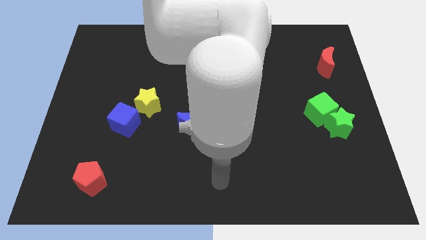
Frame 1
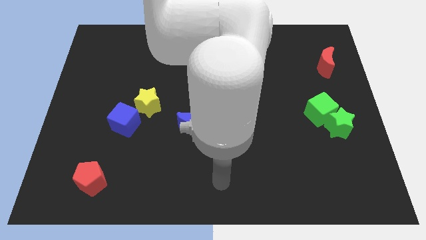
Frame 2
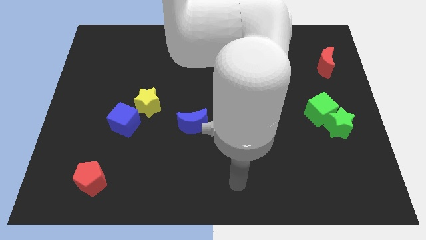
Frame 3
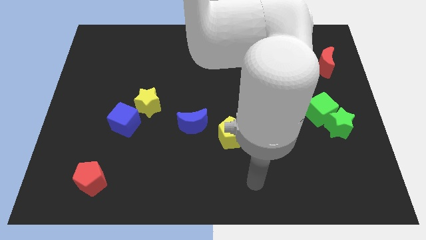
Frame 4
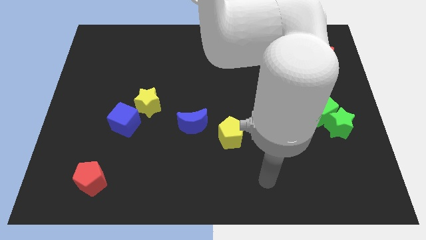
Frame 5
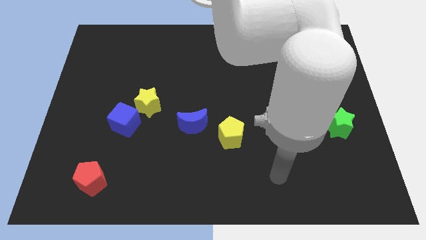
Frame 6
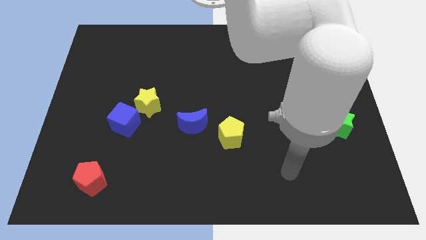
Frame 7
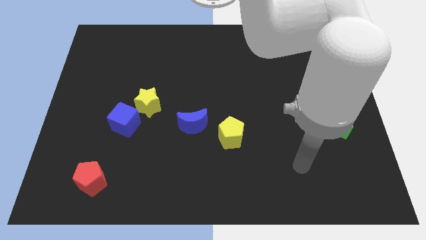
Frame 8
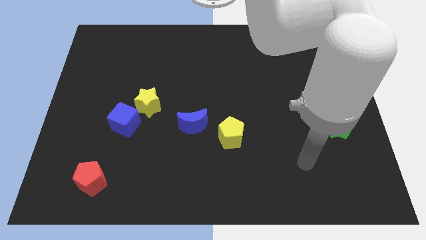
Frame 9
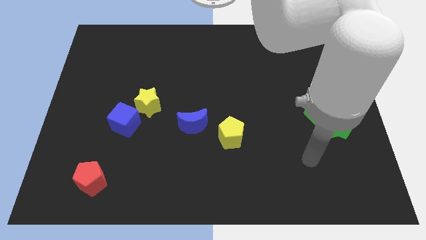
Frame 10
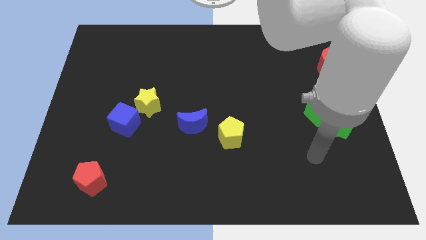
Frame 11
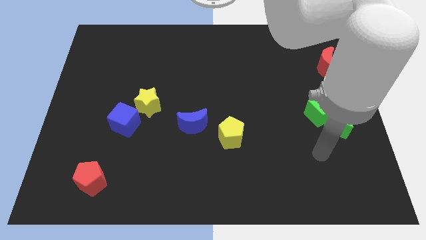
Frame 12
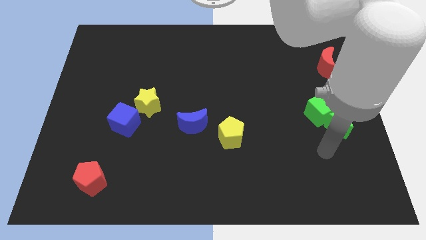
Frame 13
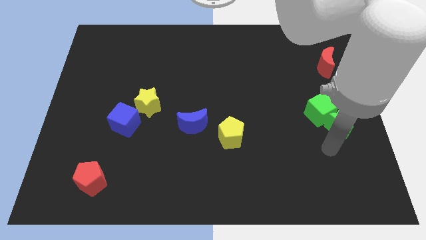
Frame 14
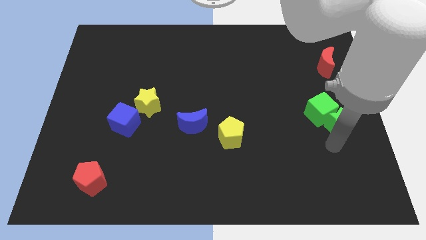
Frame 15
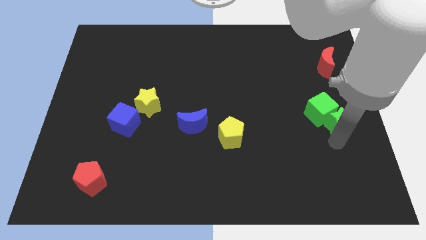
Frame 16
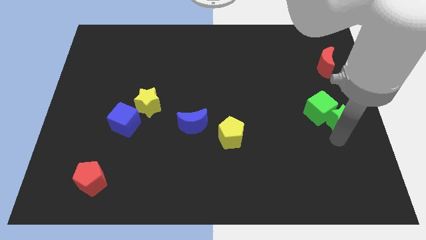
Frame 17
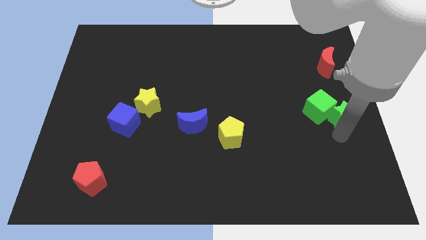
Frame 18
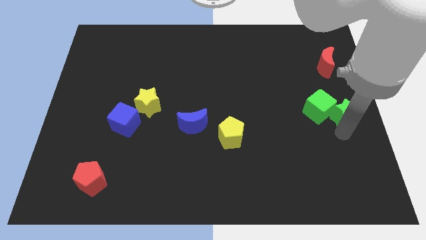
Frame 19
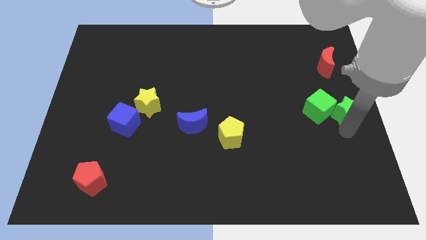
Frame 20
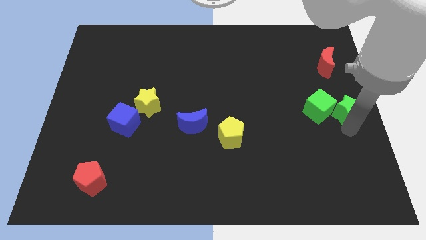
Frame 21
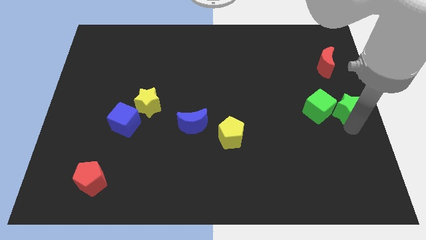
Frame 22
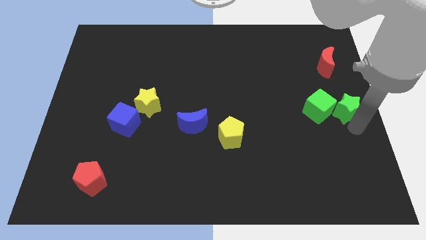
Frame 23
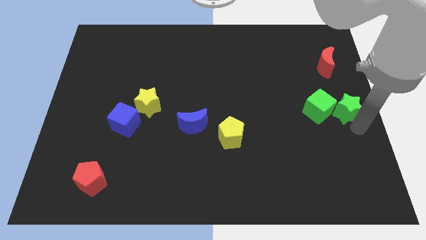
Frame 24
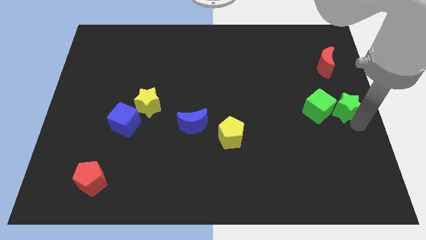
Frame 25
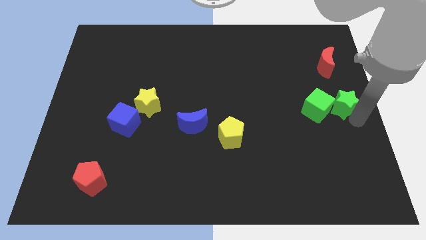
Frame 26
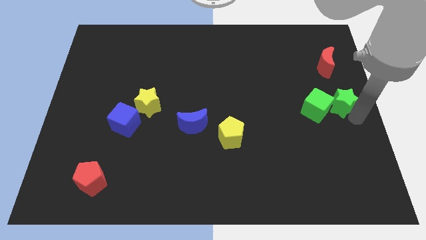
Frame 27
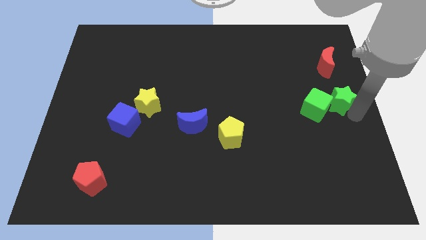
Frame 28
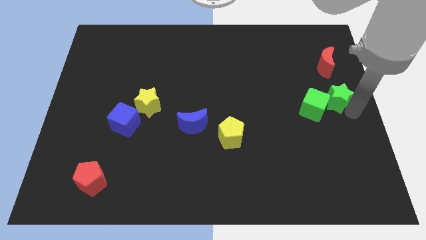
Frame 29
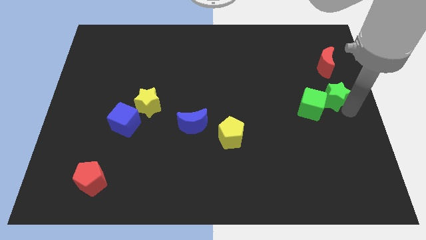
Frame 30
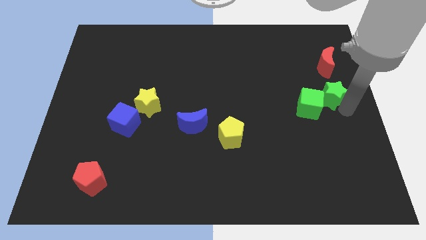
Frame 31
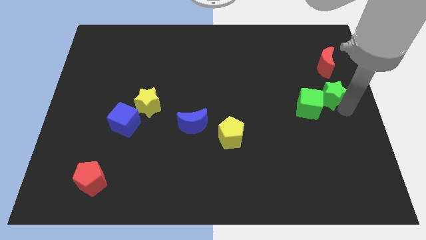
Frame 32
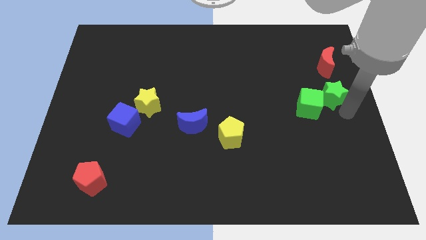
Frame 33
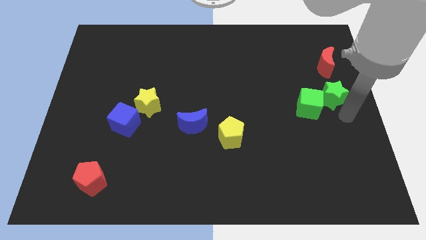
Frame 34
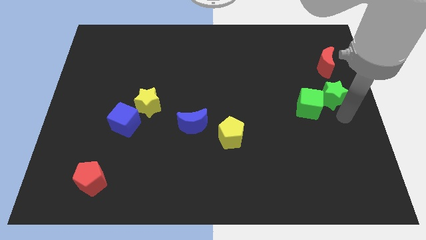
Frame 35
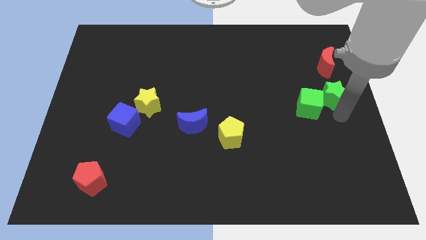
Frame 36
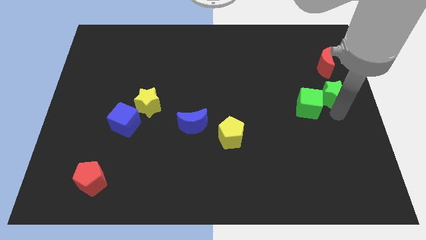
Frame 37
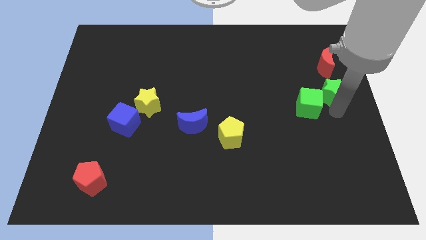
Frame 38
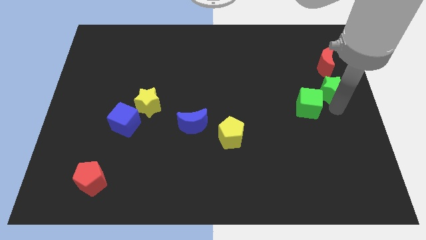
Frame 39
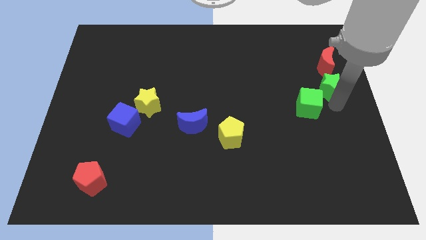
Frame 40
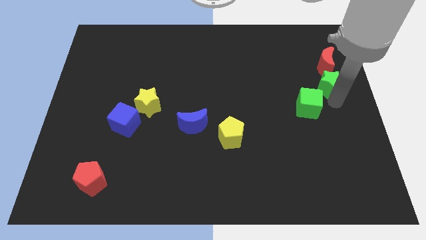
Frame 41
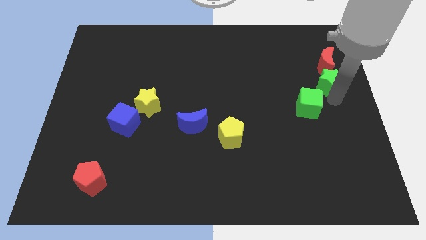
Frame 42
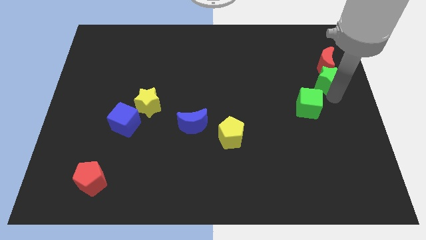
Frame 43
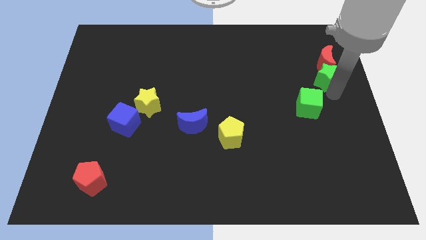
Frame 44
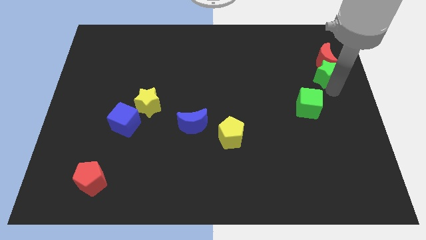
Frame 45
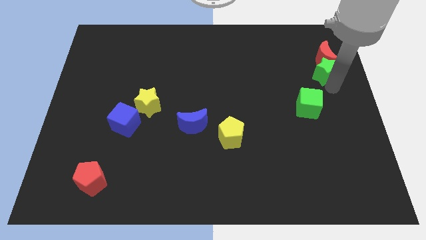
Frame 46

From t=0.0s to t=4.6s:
move the green star towards the red moon

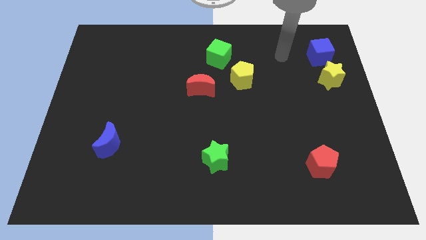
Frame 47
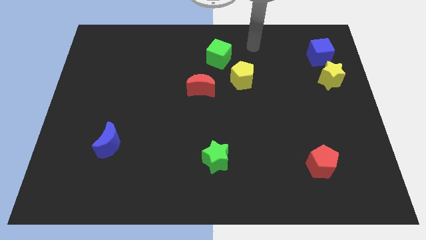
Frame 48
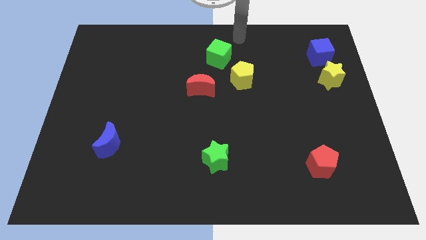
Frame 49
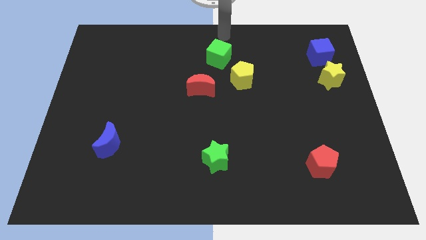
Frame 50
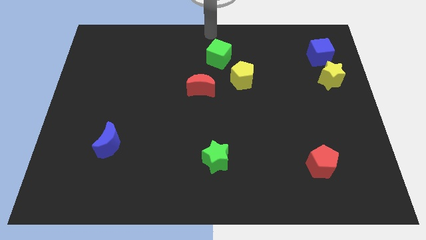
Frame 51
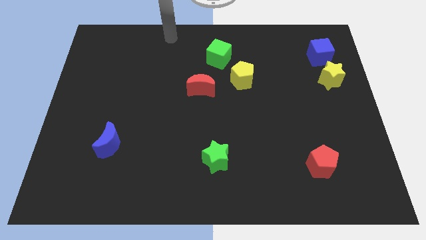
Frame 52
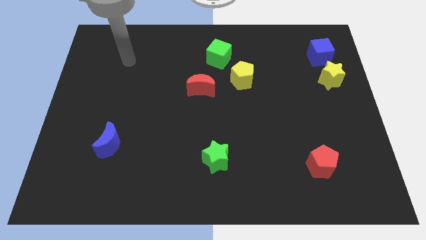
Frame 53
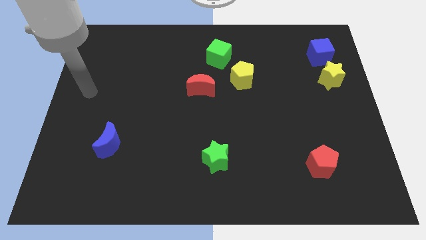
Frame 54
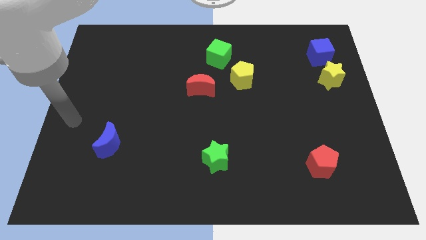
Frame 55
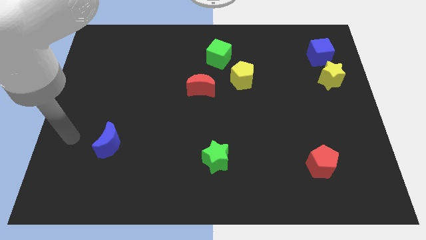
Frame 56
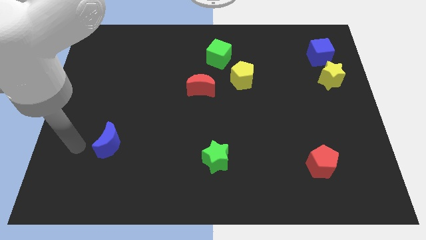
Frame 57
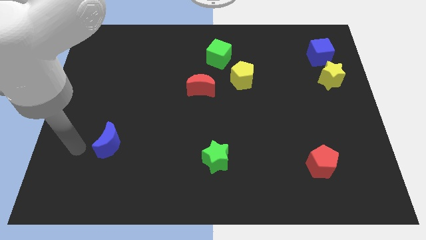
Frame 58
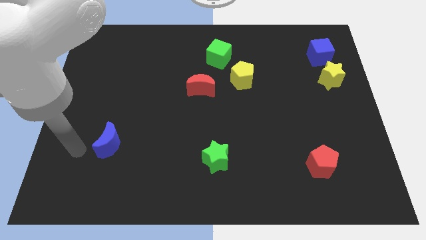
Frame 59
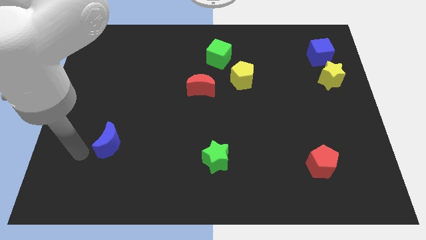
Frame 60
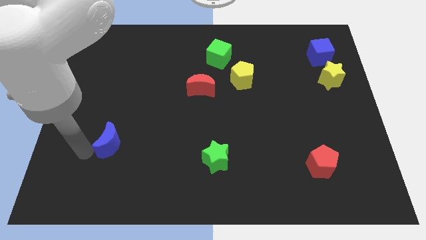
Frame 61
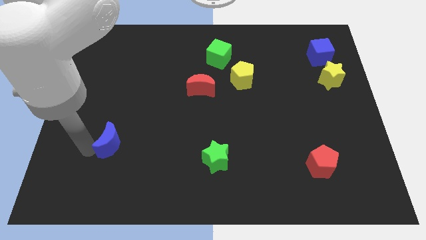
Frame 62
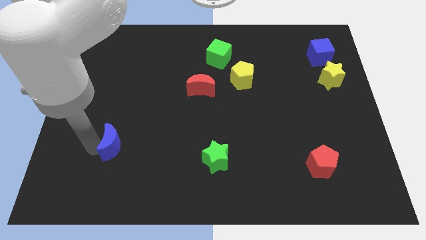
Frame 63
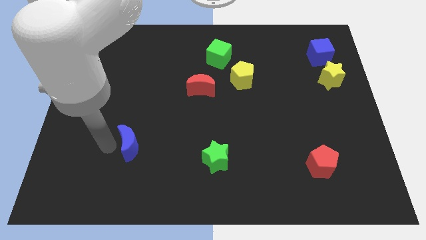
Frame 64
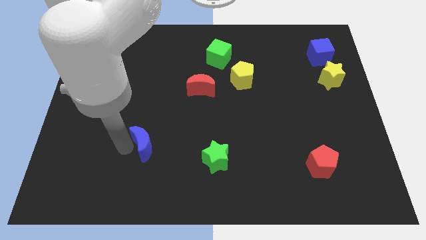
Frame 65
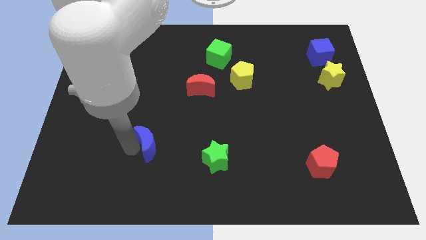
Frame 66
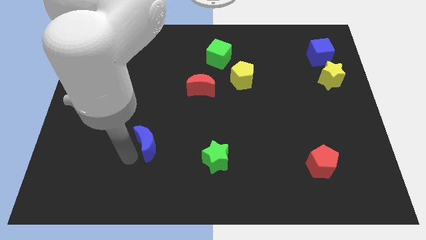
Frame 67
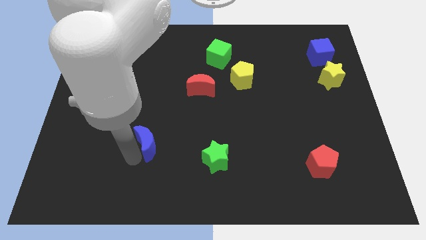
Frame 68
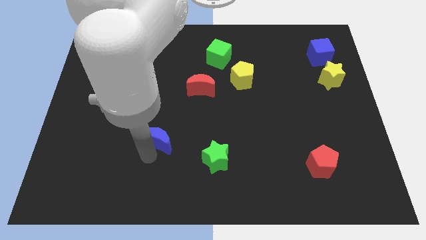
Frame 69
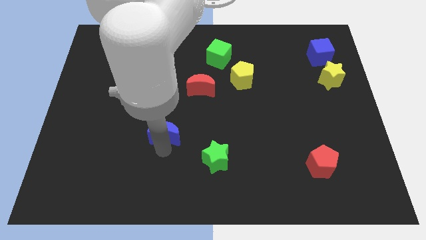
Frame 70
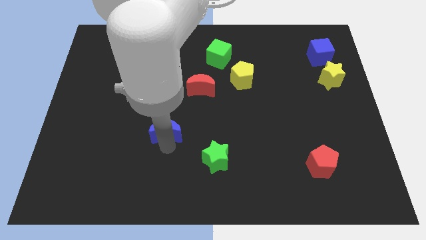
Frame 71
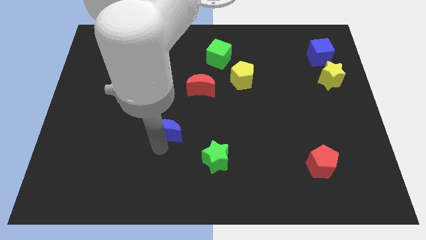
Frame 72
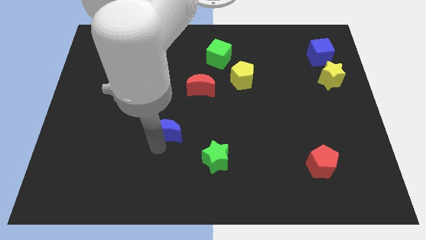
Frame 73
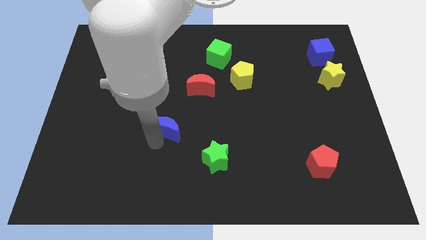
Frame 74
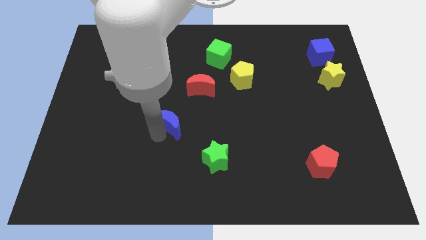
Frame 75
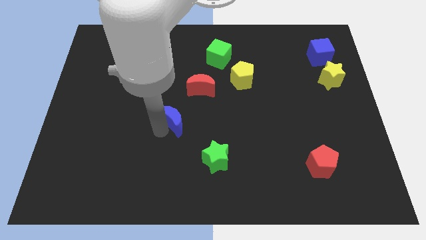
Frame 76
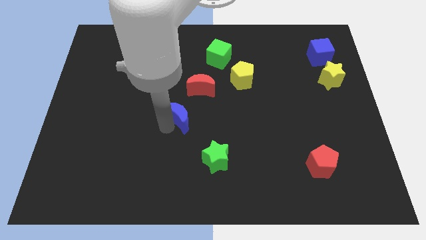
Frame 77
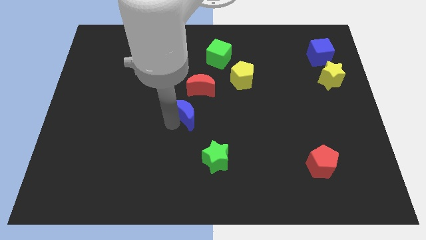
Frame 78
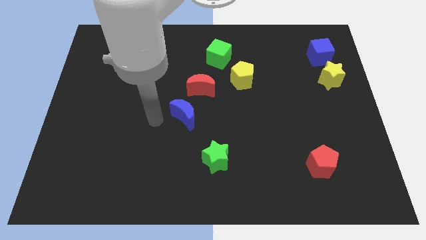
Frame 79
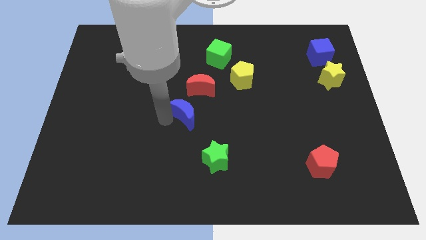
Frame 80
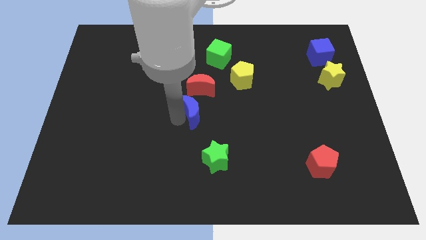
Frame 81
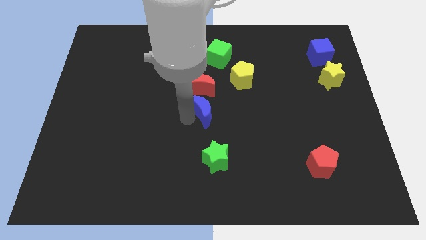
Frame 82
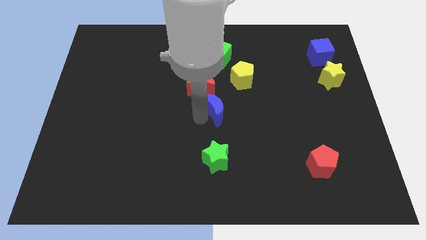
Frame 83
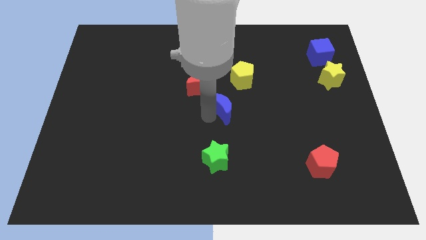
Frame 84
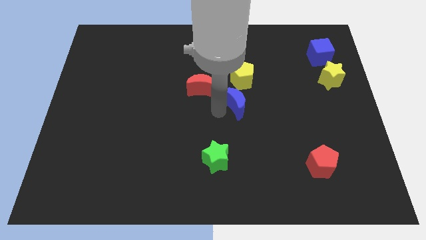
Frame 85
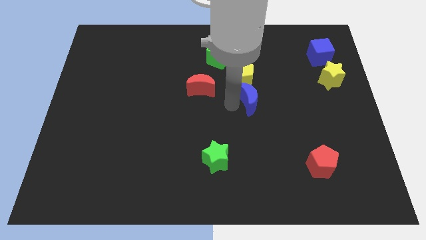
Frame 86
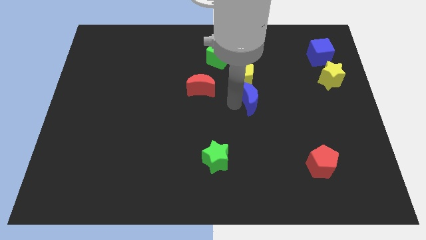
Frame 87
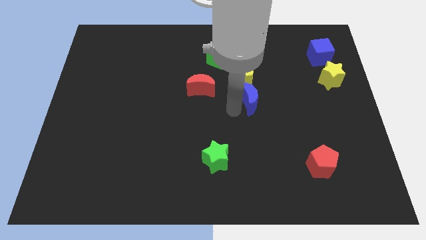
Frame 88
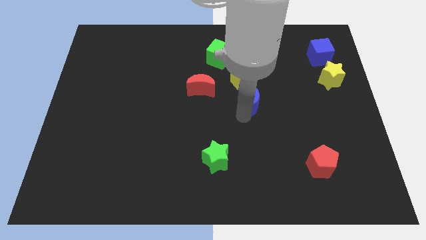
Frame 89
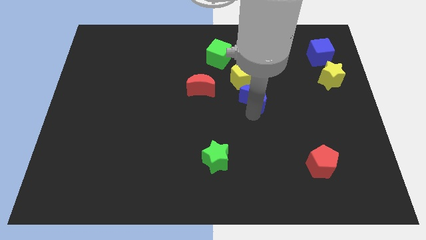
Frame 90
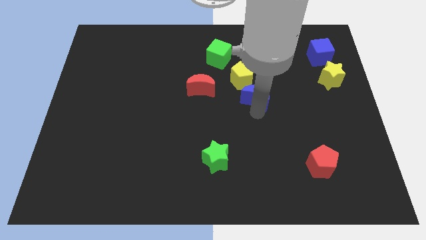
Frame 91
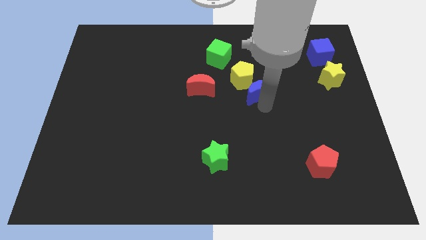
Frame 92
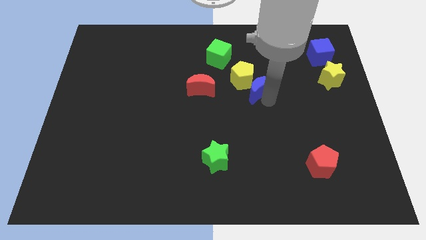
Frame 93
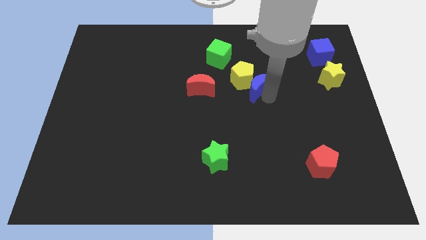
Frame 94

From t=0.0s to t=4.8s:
move the blue moon close to the yellow pentagon
